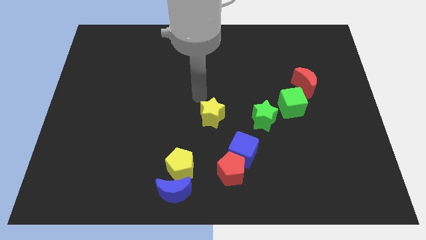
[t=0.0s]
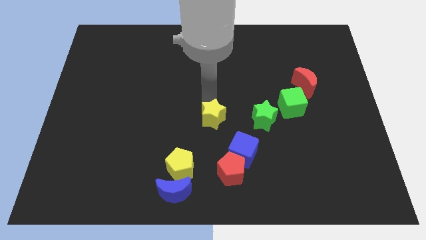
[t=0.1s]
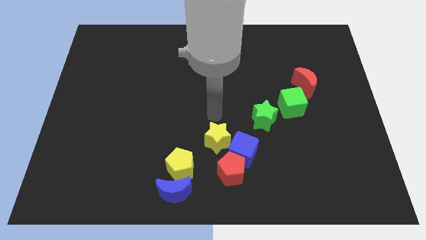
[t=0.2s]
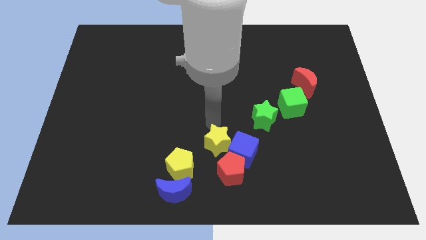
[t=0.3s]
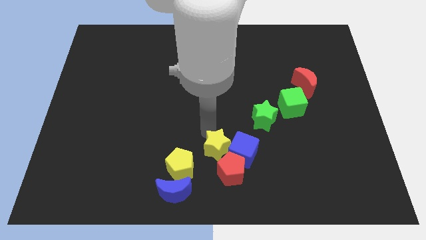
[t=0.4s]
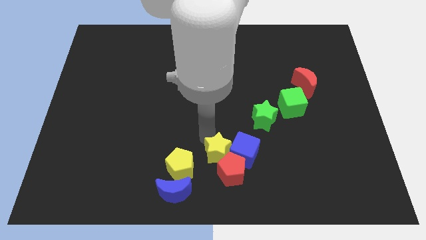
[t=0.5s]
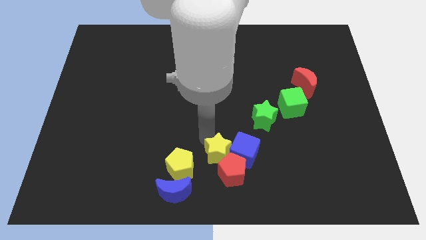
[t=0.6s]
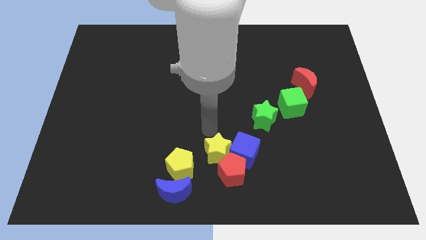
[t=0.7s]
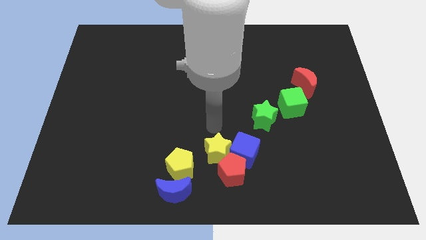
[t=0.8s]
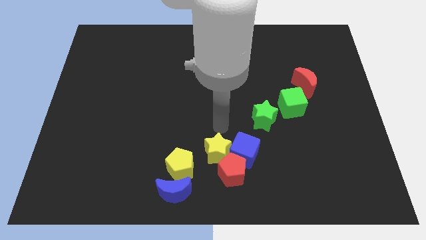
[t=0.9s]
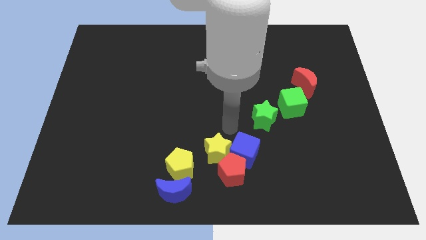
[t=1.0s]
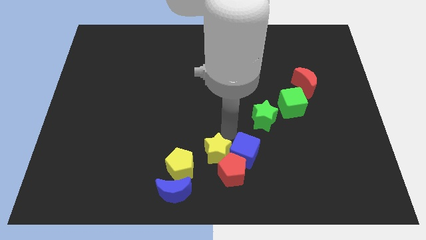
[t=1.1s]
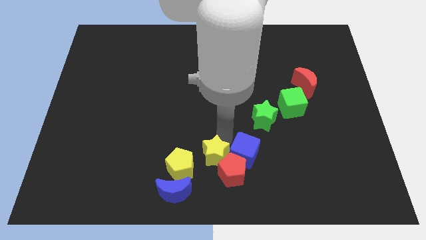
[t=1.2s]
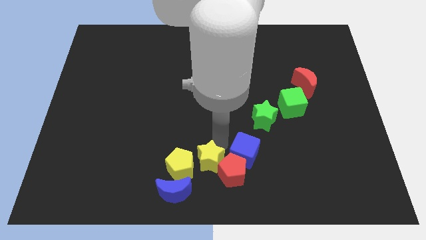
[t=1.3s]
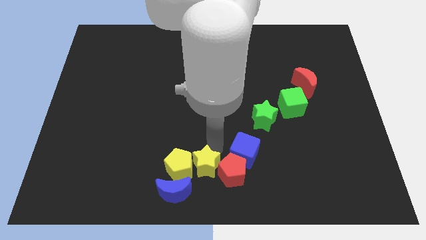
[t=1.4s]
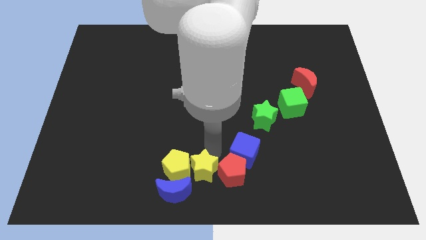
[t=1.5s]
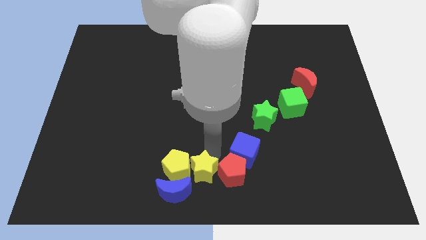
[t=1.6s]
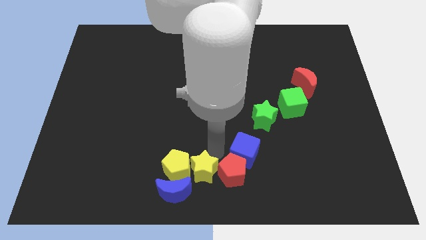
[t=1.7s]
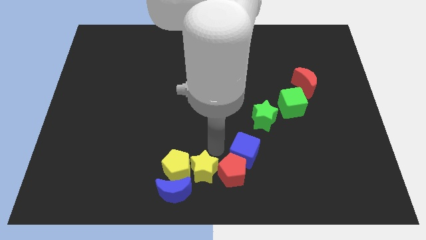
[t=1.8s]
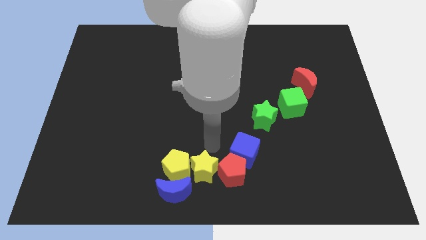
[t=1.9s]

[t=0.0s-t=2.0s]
place the yellow star in between the red pentagon and yellow pentagon

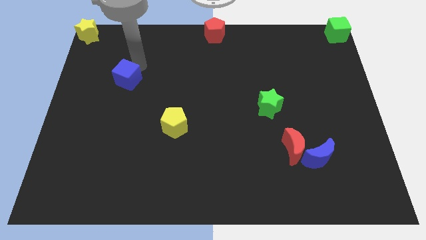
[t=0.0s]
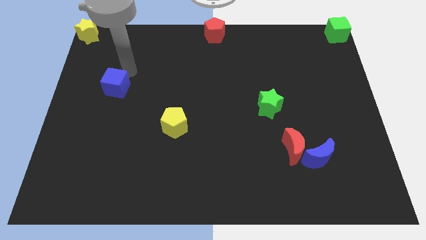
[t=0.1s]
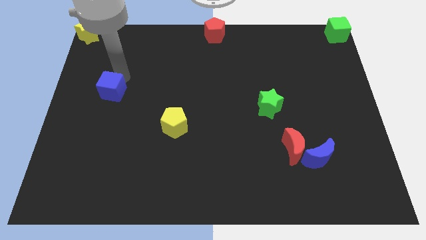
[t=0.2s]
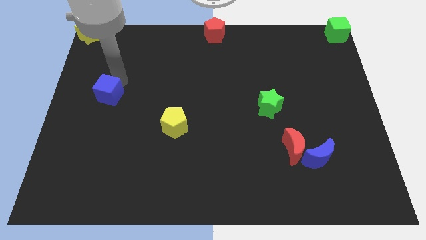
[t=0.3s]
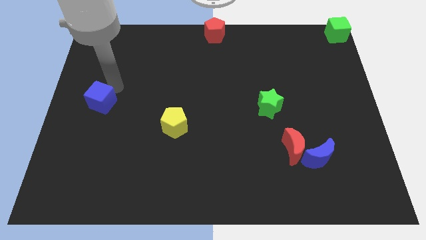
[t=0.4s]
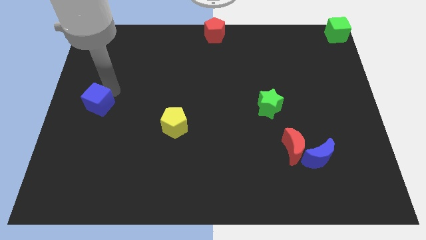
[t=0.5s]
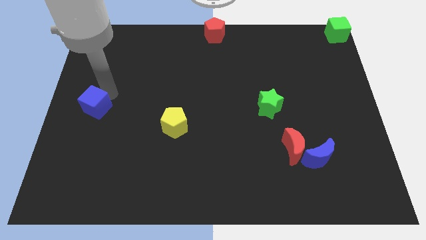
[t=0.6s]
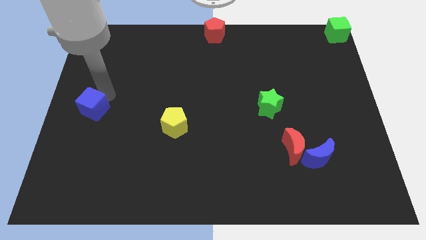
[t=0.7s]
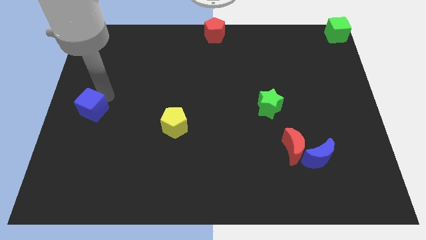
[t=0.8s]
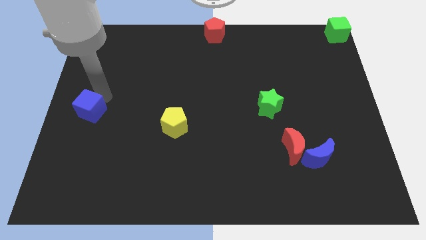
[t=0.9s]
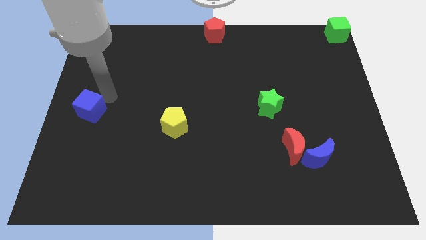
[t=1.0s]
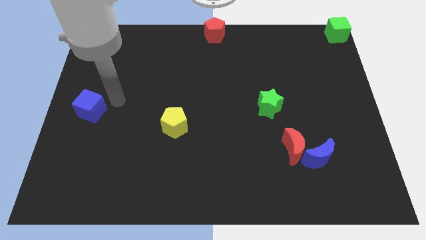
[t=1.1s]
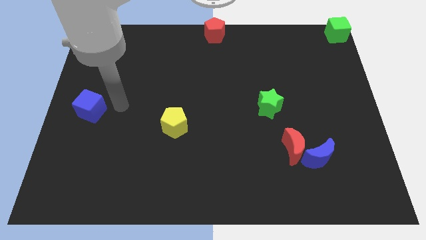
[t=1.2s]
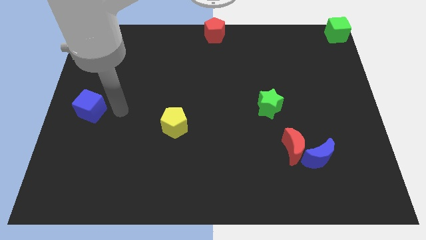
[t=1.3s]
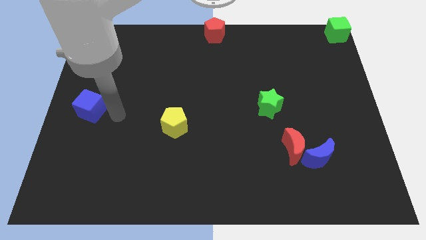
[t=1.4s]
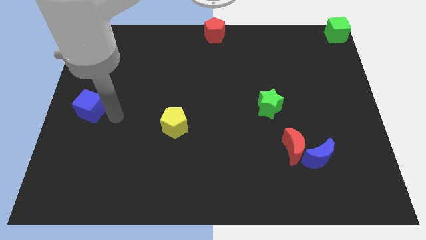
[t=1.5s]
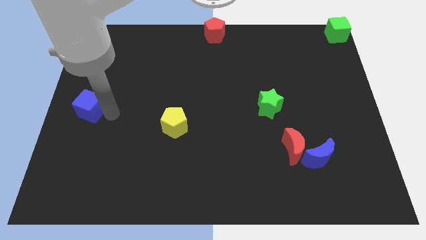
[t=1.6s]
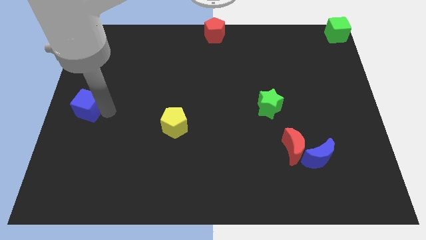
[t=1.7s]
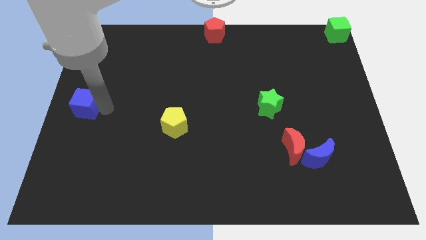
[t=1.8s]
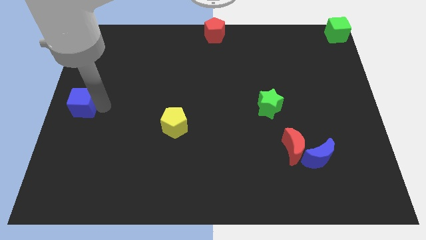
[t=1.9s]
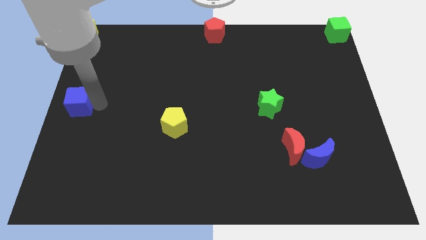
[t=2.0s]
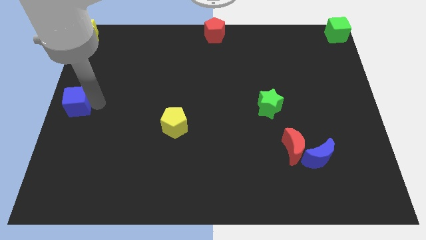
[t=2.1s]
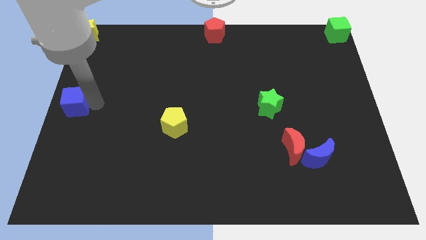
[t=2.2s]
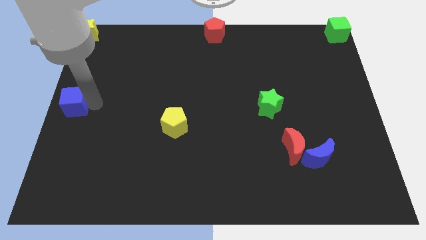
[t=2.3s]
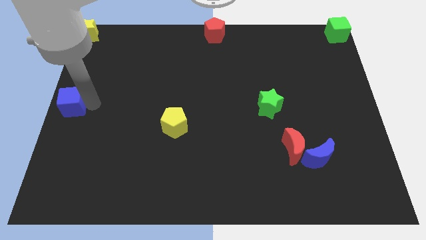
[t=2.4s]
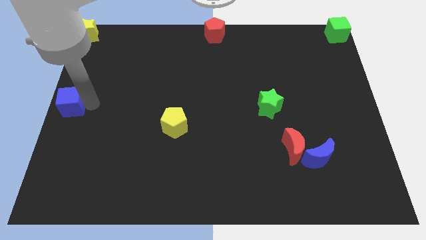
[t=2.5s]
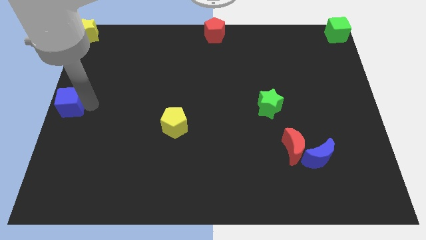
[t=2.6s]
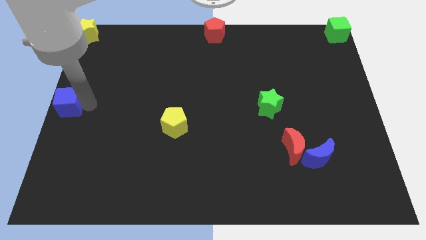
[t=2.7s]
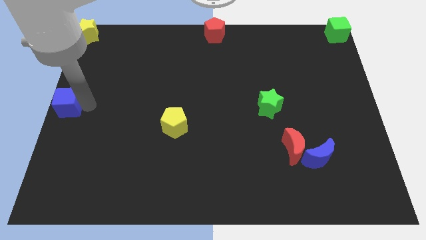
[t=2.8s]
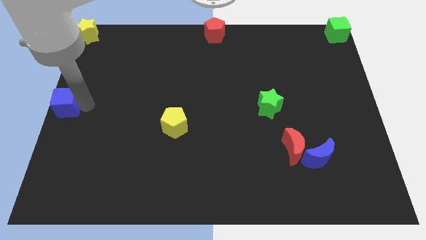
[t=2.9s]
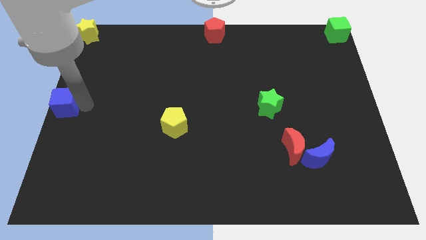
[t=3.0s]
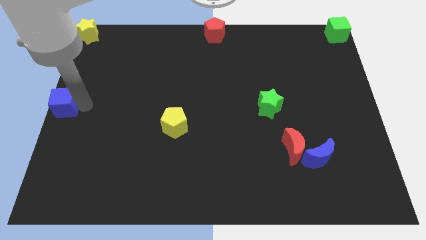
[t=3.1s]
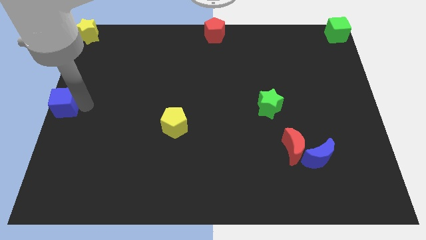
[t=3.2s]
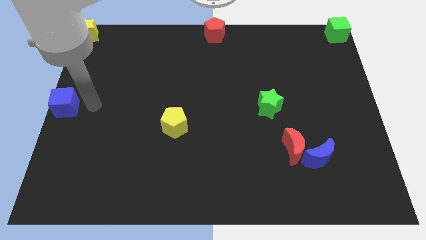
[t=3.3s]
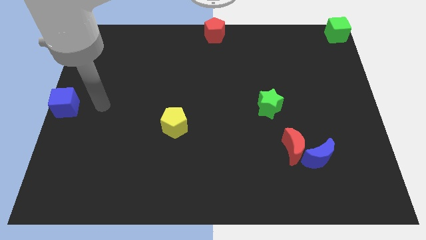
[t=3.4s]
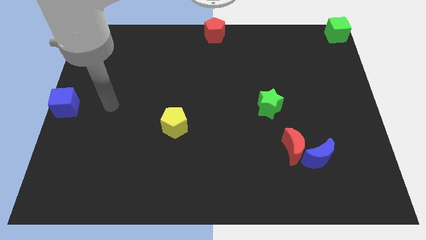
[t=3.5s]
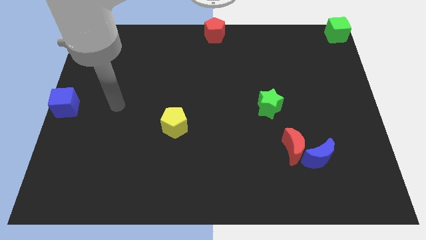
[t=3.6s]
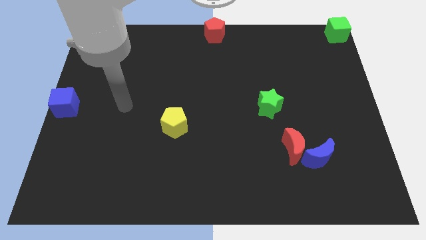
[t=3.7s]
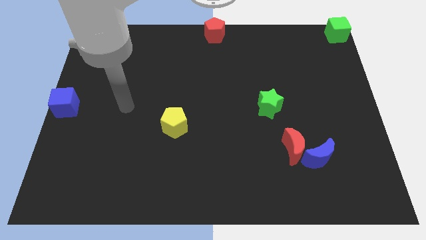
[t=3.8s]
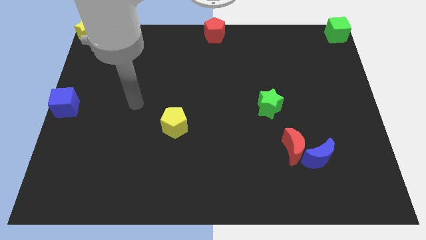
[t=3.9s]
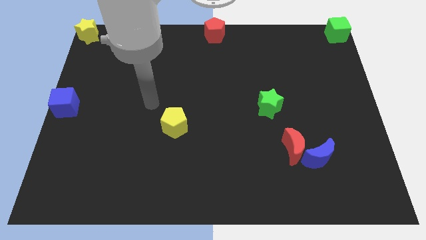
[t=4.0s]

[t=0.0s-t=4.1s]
move blue cube to the left center

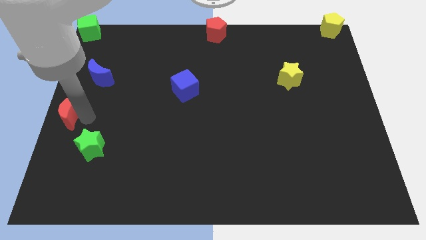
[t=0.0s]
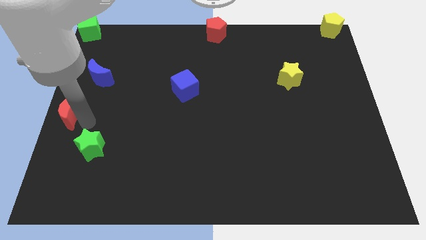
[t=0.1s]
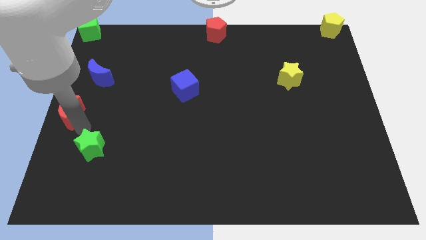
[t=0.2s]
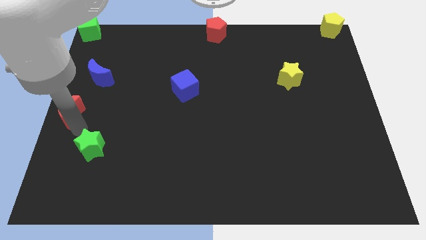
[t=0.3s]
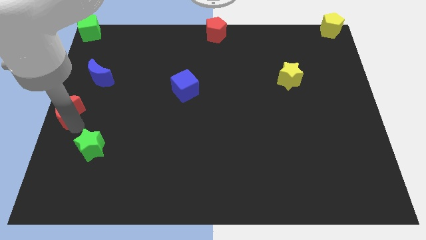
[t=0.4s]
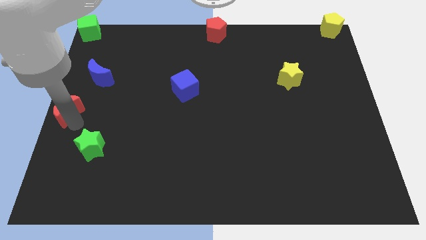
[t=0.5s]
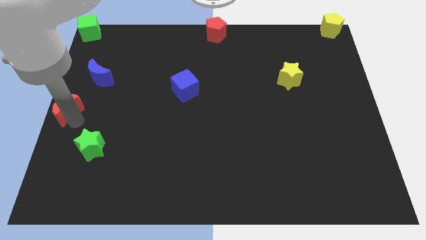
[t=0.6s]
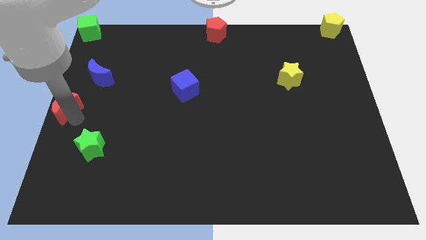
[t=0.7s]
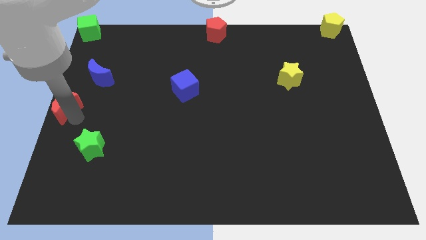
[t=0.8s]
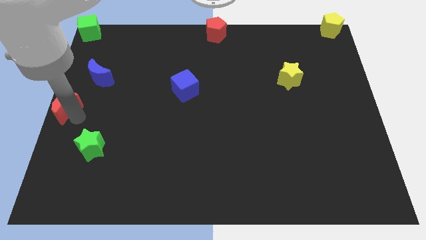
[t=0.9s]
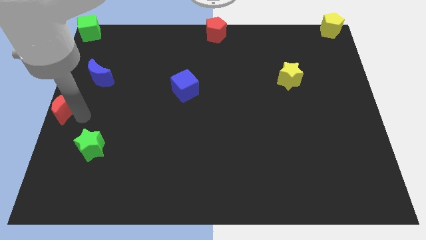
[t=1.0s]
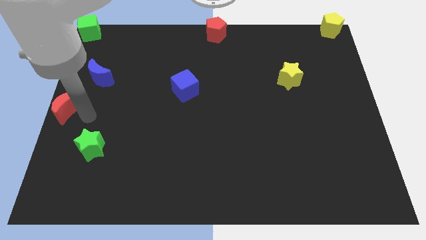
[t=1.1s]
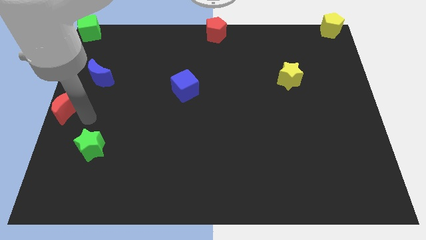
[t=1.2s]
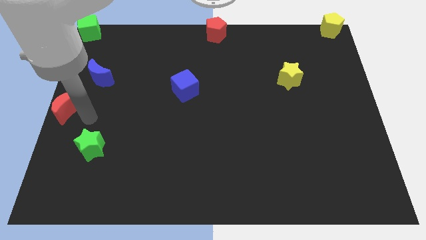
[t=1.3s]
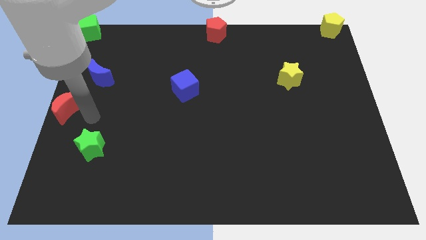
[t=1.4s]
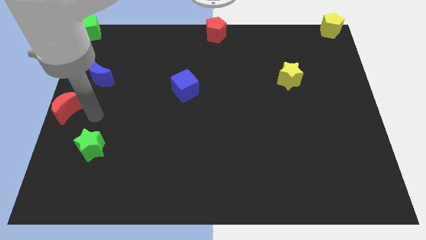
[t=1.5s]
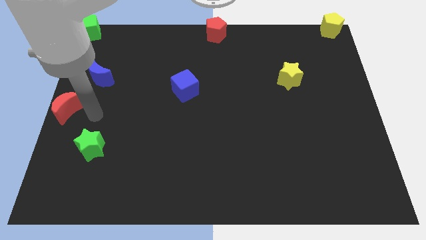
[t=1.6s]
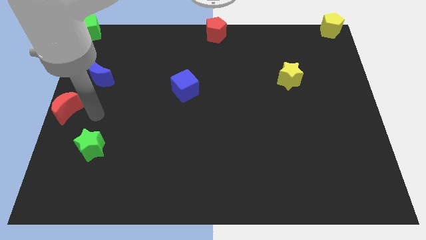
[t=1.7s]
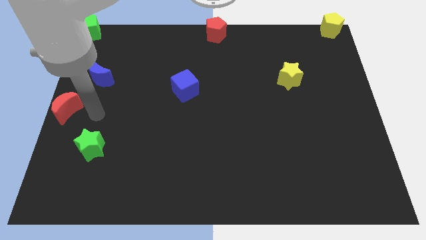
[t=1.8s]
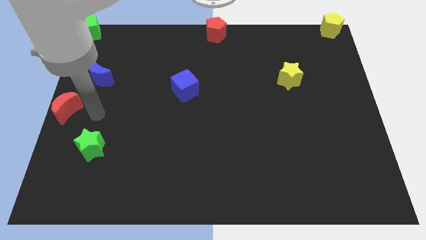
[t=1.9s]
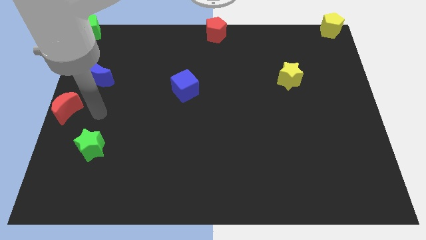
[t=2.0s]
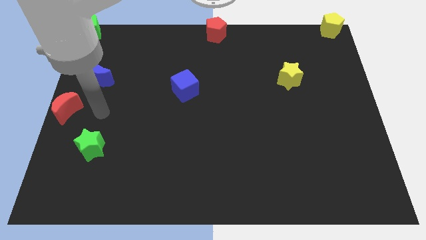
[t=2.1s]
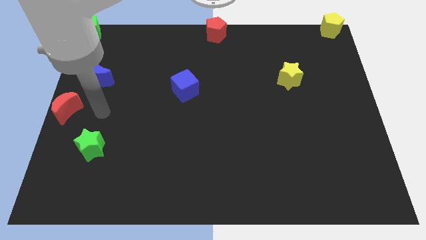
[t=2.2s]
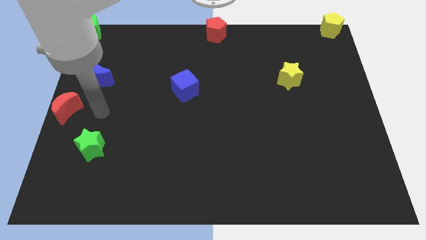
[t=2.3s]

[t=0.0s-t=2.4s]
move the red crescent towards the left center of the board

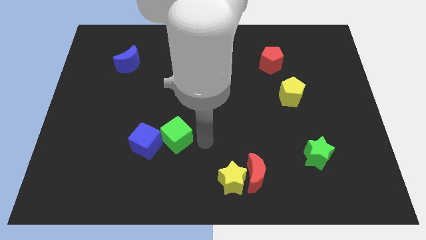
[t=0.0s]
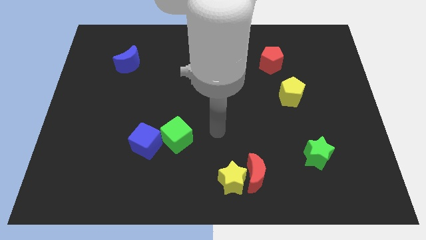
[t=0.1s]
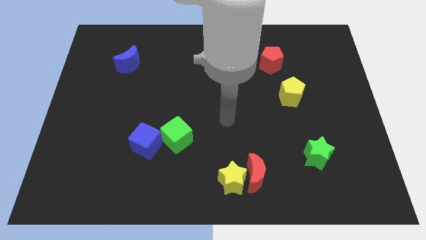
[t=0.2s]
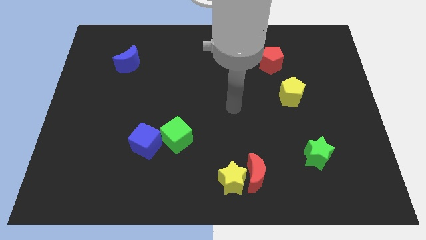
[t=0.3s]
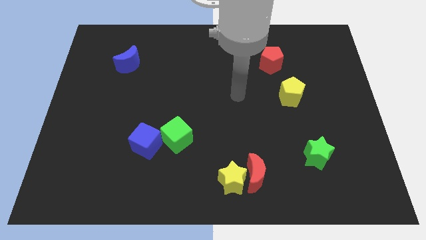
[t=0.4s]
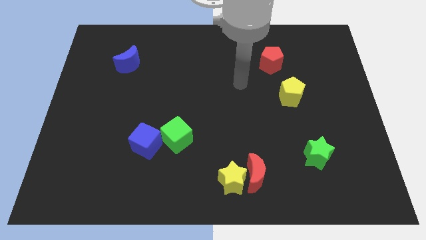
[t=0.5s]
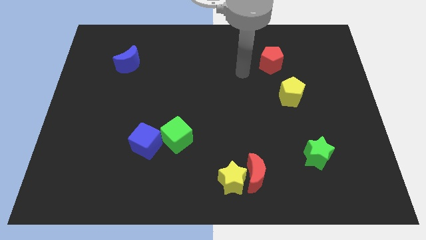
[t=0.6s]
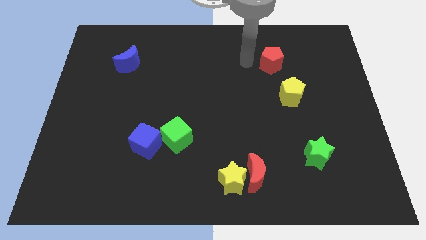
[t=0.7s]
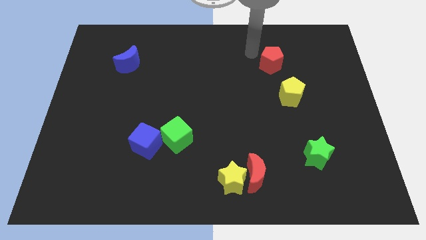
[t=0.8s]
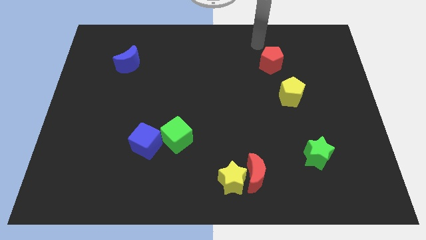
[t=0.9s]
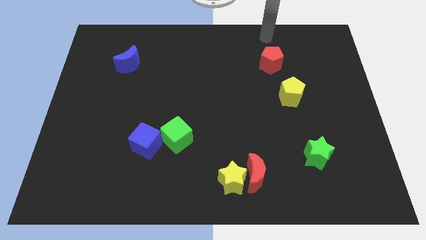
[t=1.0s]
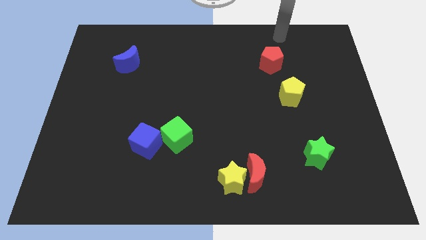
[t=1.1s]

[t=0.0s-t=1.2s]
move arm towards red pentagon
